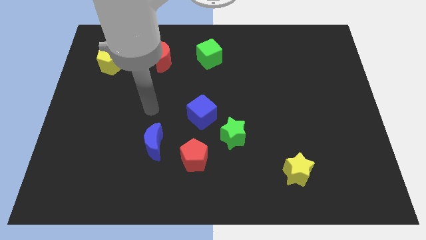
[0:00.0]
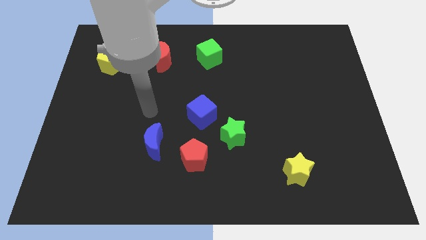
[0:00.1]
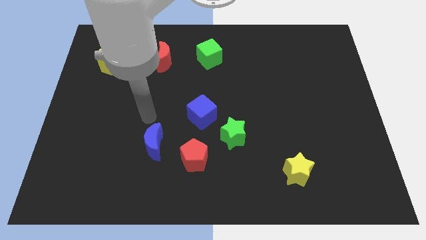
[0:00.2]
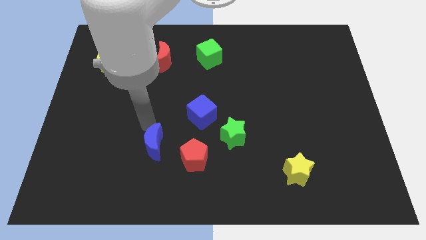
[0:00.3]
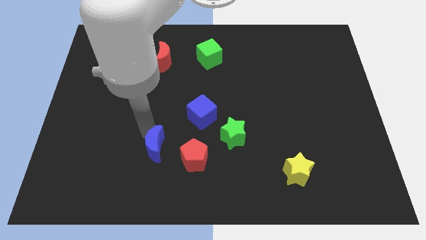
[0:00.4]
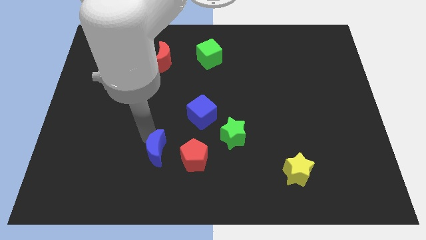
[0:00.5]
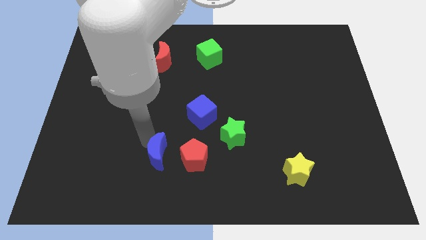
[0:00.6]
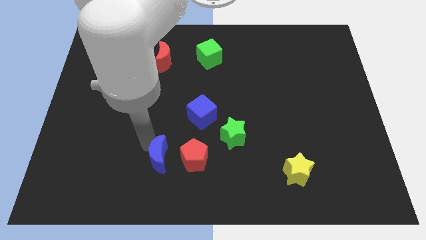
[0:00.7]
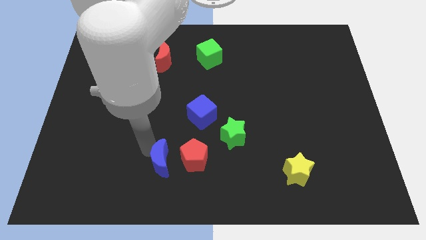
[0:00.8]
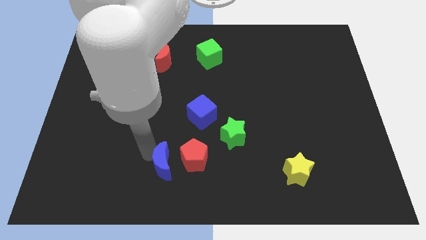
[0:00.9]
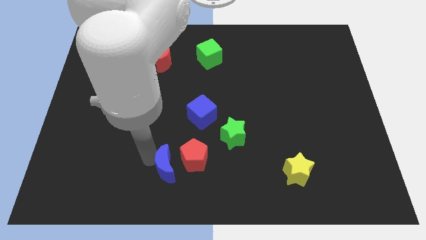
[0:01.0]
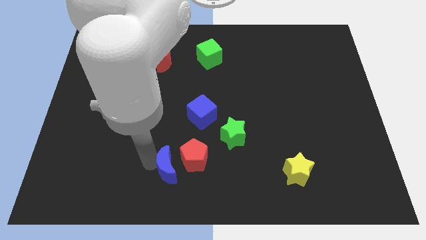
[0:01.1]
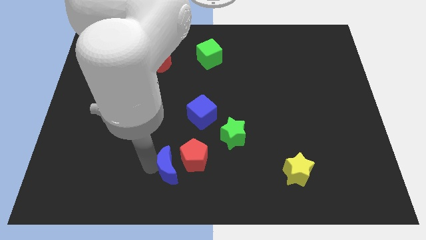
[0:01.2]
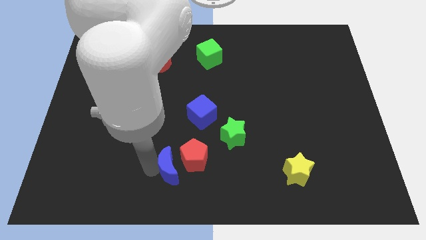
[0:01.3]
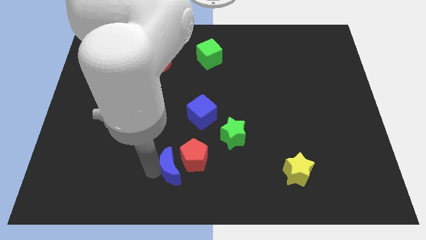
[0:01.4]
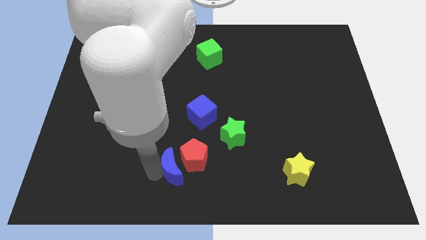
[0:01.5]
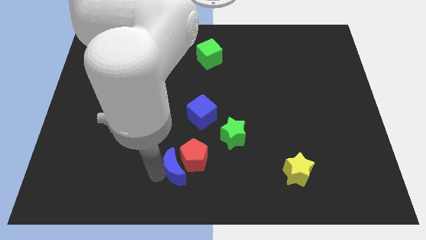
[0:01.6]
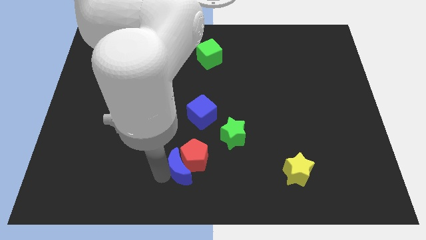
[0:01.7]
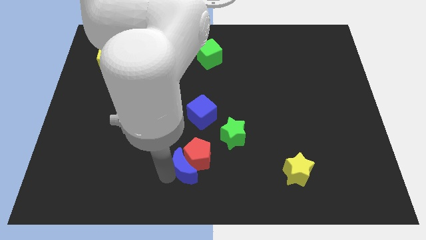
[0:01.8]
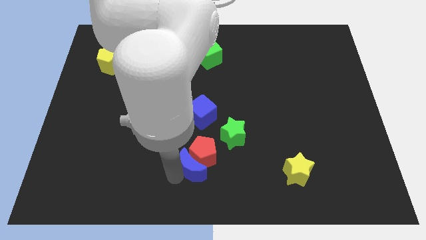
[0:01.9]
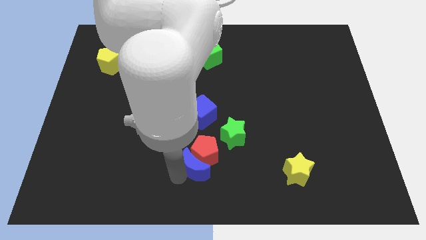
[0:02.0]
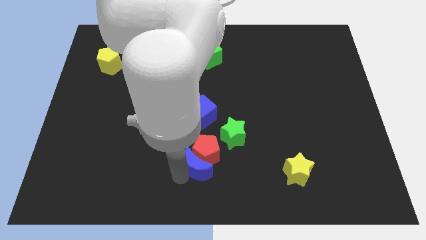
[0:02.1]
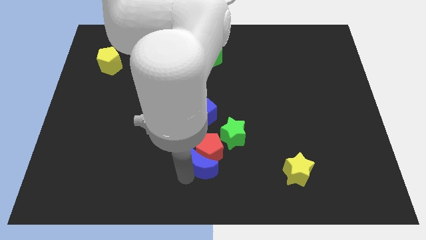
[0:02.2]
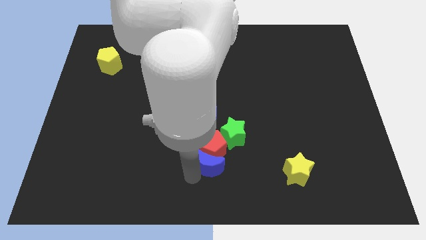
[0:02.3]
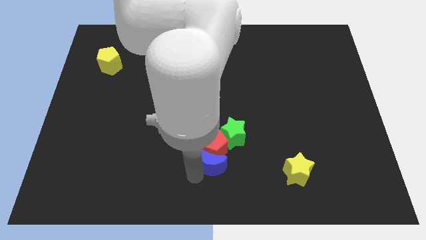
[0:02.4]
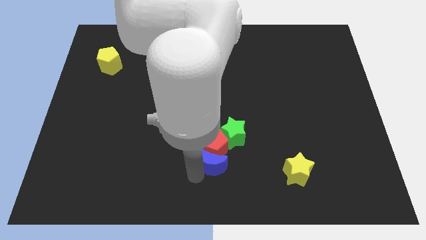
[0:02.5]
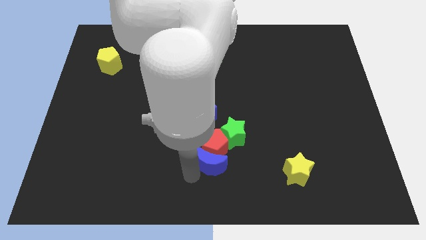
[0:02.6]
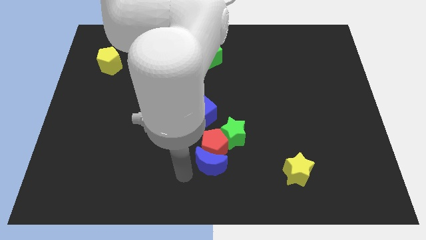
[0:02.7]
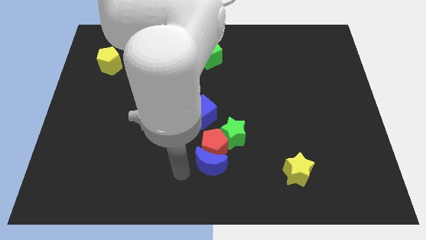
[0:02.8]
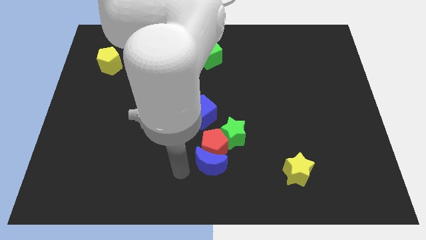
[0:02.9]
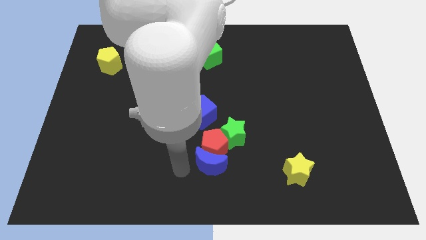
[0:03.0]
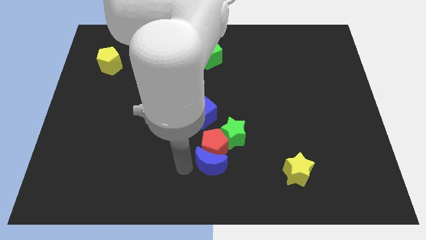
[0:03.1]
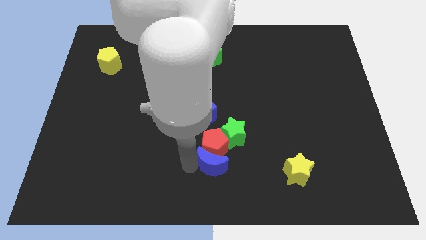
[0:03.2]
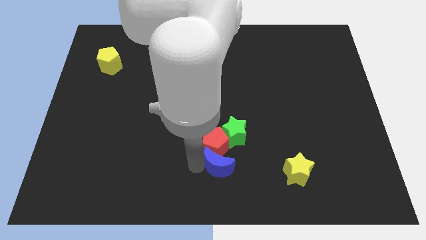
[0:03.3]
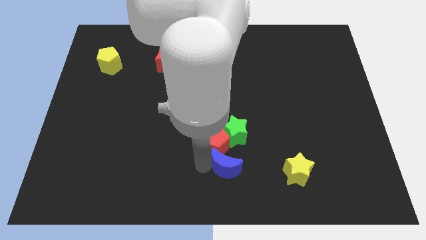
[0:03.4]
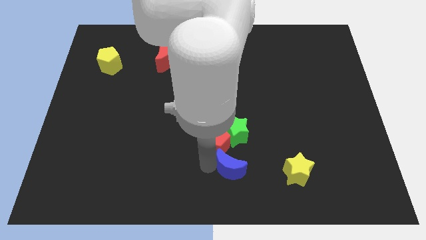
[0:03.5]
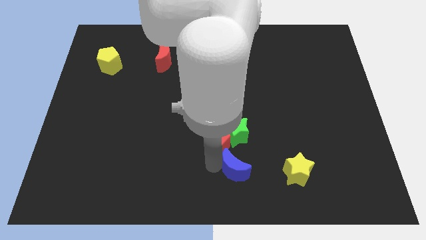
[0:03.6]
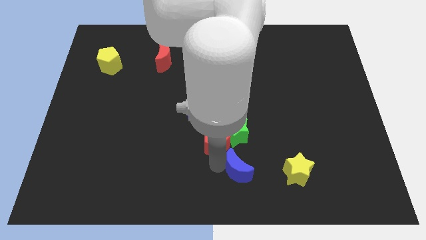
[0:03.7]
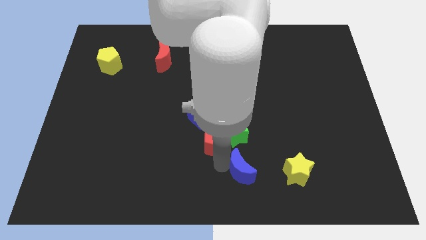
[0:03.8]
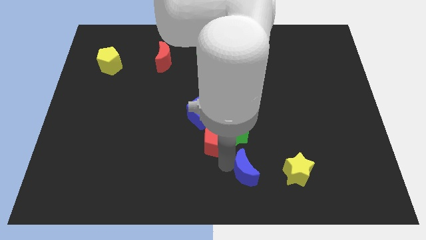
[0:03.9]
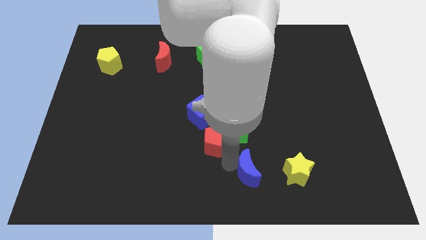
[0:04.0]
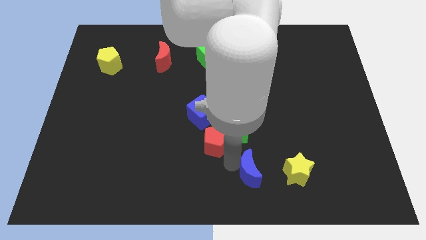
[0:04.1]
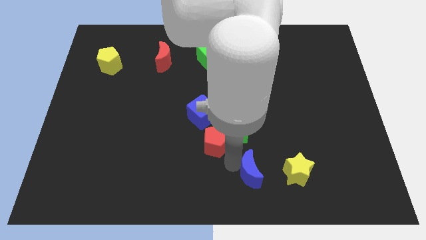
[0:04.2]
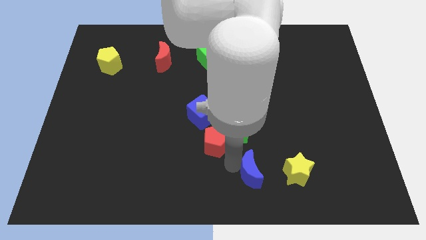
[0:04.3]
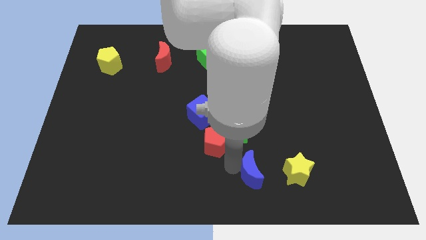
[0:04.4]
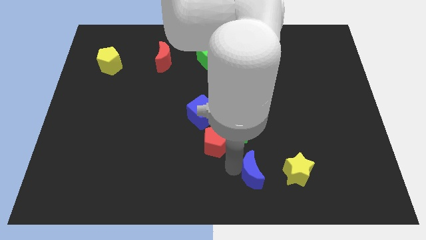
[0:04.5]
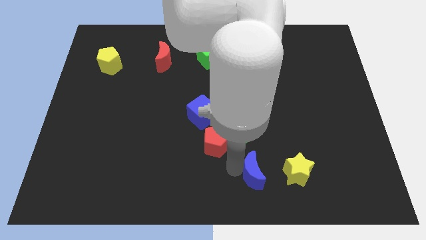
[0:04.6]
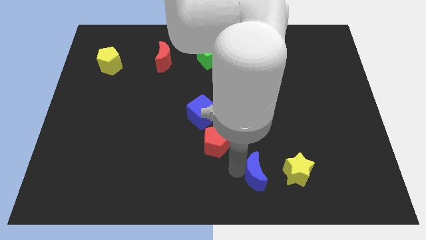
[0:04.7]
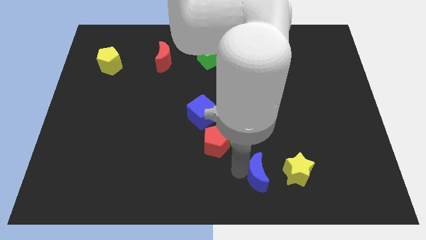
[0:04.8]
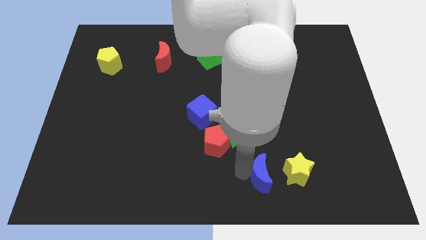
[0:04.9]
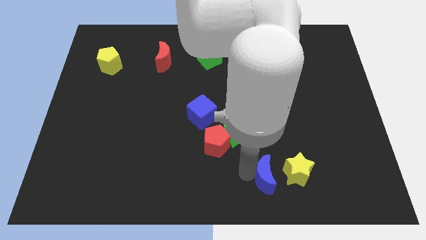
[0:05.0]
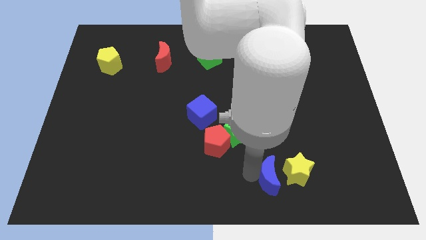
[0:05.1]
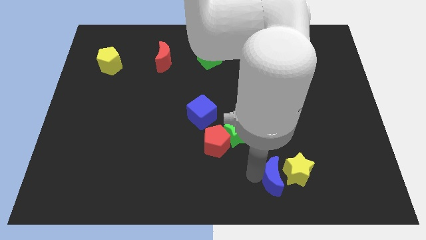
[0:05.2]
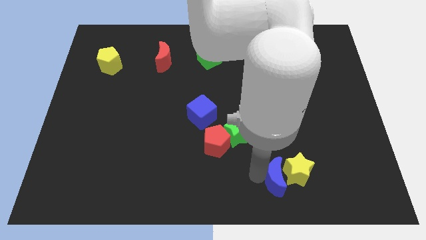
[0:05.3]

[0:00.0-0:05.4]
push the blue moon close to the yellow star

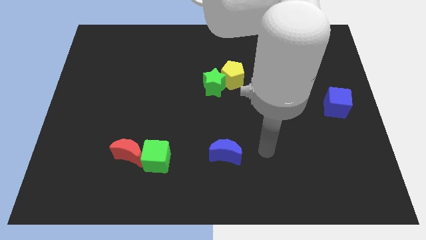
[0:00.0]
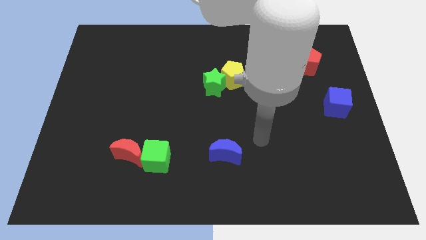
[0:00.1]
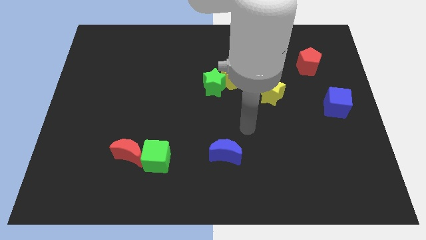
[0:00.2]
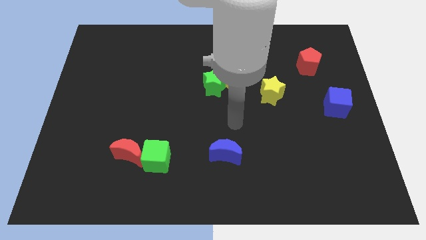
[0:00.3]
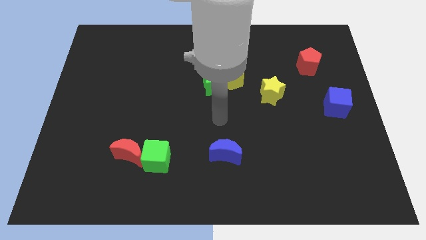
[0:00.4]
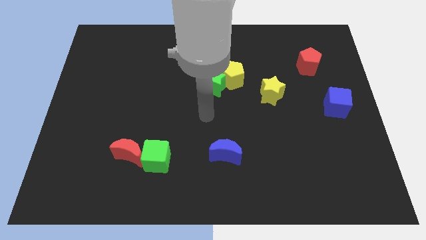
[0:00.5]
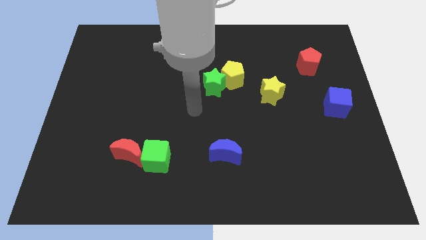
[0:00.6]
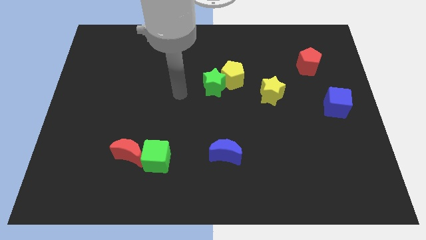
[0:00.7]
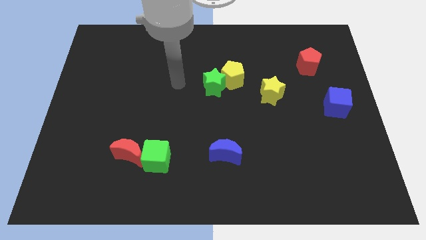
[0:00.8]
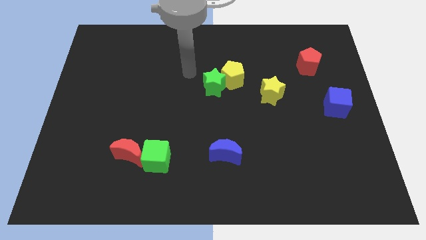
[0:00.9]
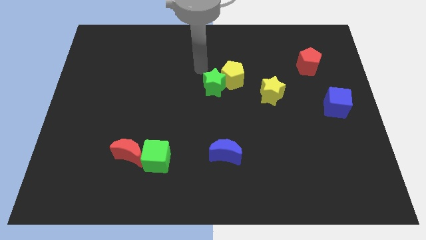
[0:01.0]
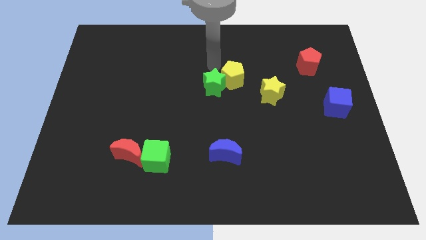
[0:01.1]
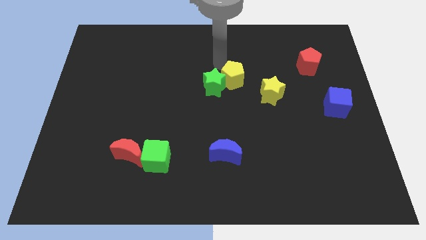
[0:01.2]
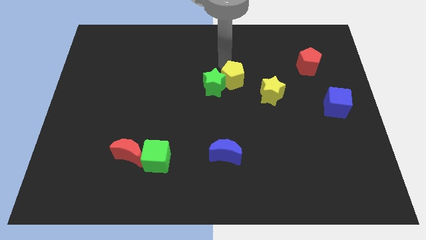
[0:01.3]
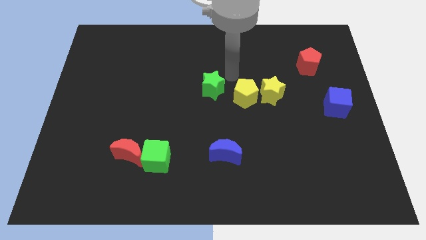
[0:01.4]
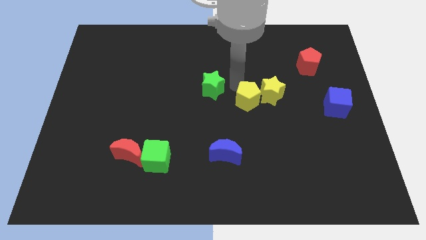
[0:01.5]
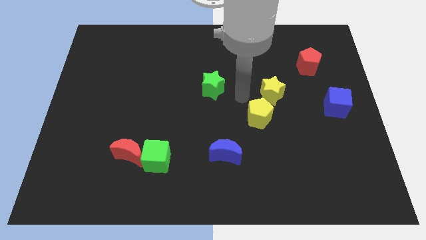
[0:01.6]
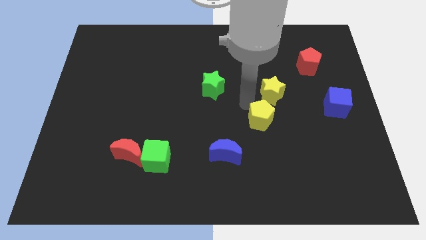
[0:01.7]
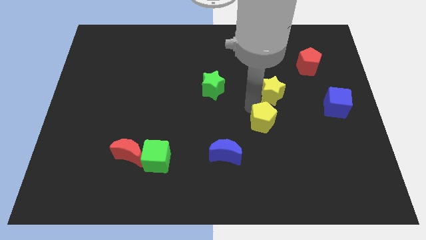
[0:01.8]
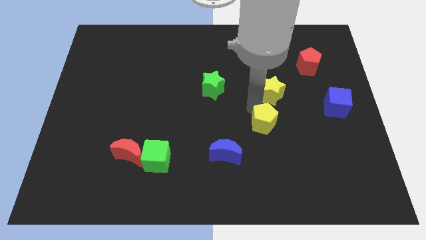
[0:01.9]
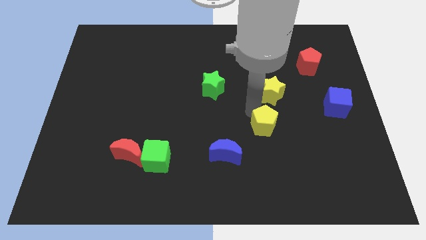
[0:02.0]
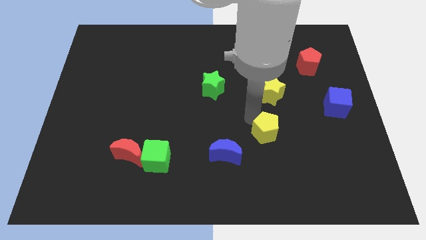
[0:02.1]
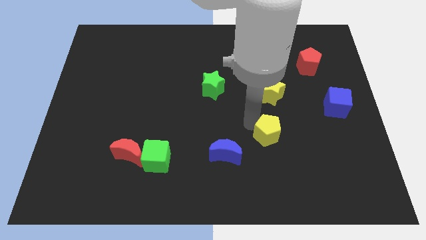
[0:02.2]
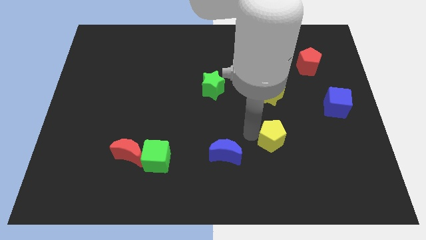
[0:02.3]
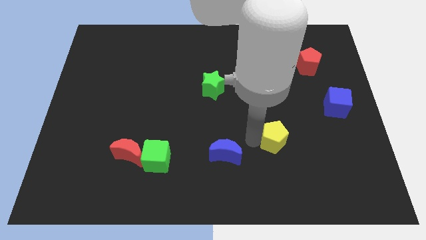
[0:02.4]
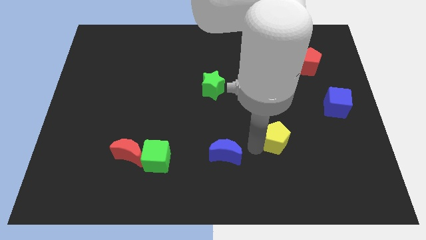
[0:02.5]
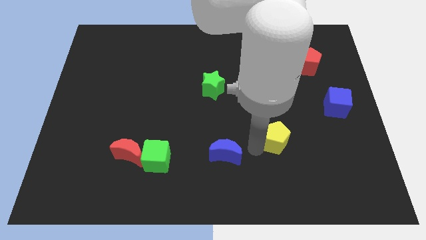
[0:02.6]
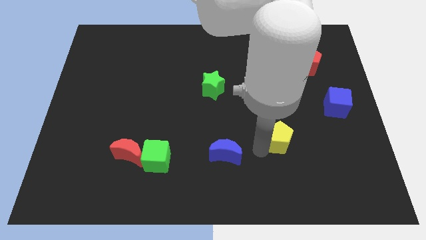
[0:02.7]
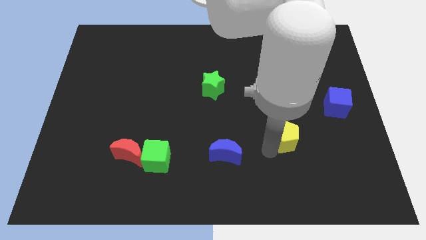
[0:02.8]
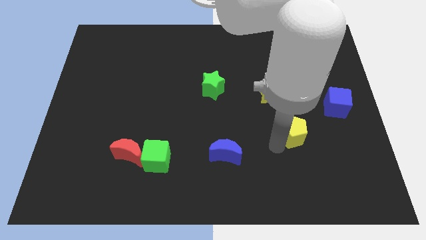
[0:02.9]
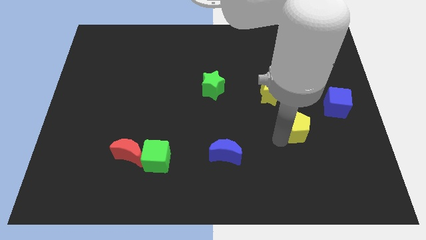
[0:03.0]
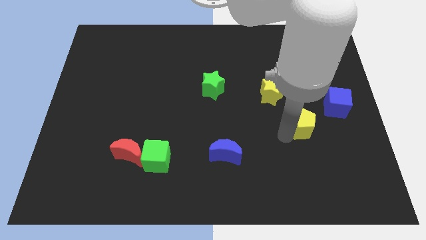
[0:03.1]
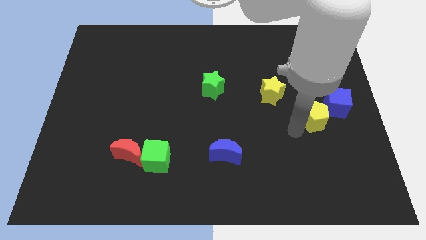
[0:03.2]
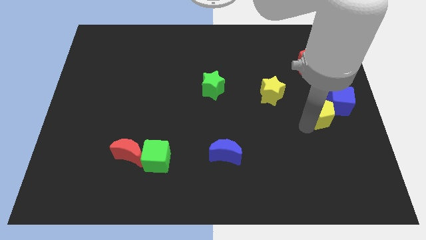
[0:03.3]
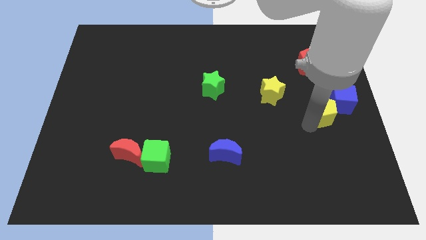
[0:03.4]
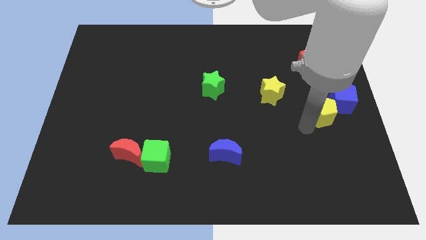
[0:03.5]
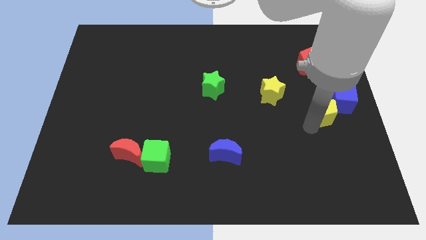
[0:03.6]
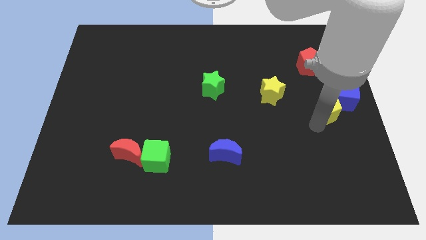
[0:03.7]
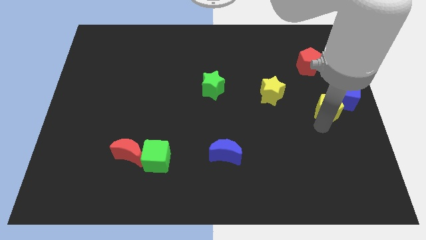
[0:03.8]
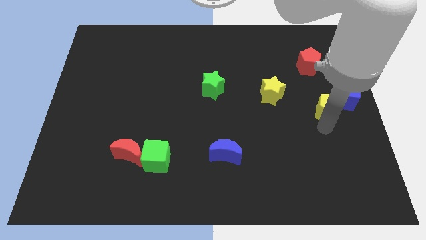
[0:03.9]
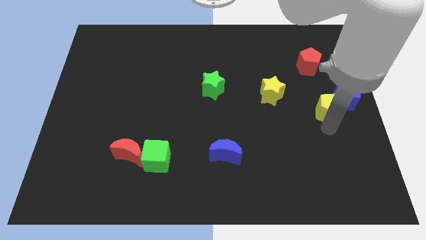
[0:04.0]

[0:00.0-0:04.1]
slide the yellow pentagon close to the blue cube
